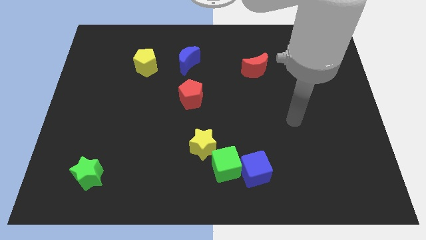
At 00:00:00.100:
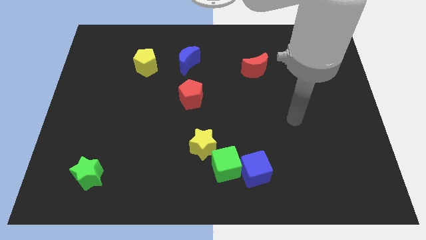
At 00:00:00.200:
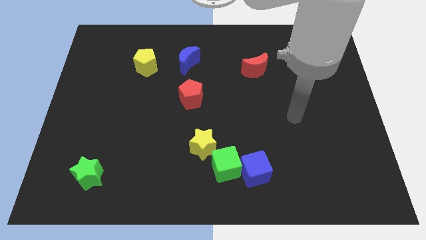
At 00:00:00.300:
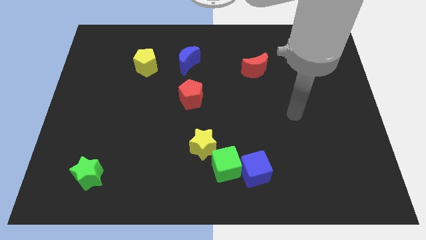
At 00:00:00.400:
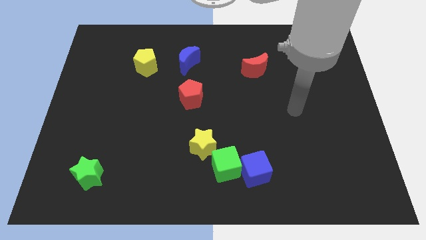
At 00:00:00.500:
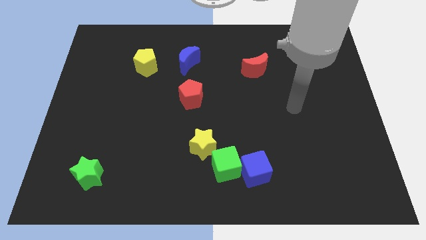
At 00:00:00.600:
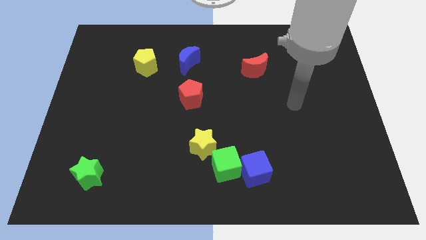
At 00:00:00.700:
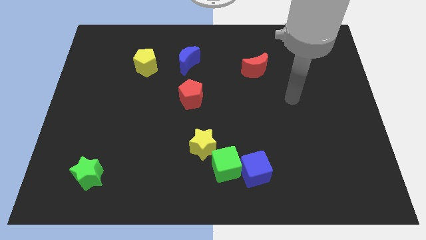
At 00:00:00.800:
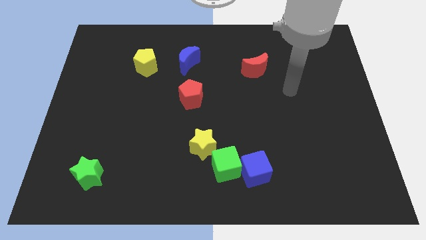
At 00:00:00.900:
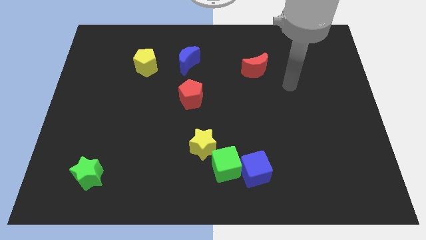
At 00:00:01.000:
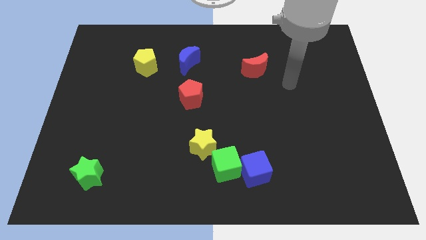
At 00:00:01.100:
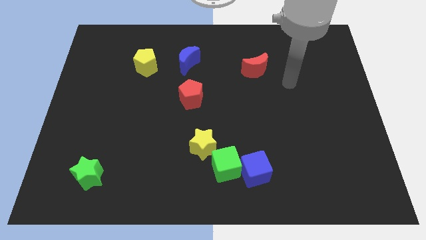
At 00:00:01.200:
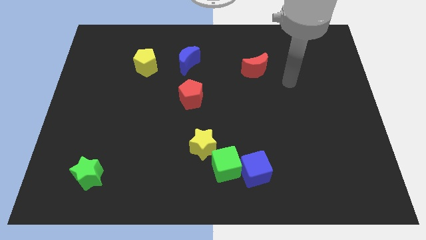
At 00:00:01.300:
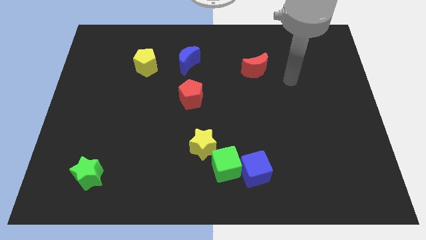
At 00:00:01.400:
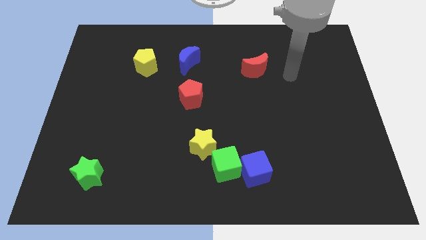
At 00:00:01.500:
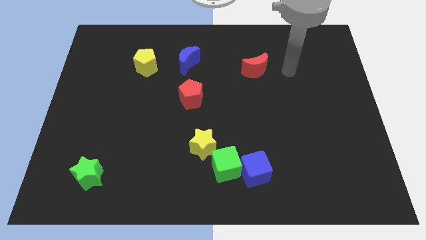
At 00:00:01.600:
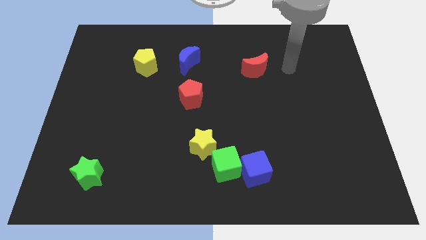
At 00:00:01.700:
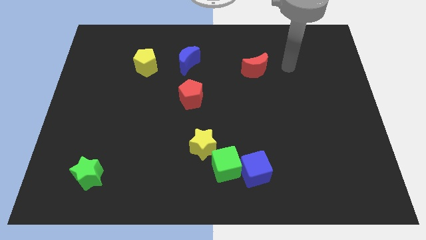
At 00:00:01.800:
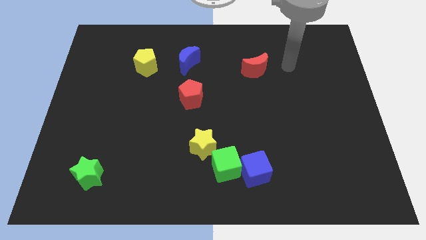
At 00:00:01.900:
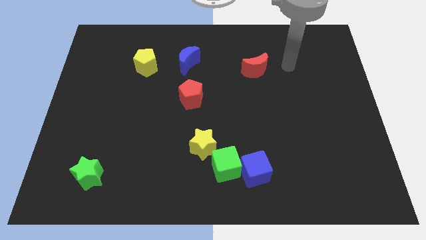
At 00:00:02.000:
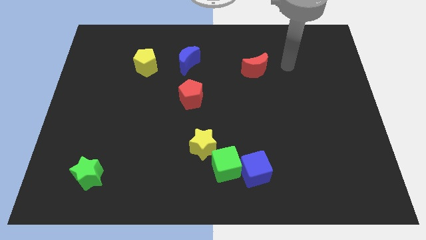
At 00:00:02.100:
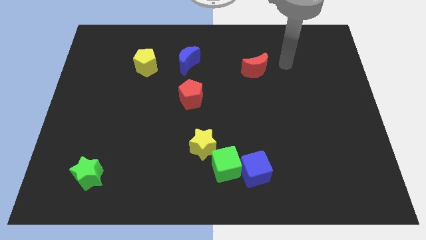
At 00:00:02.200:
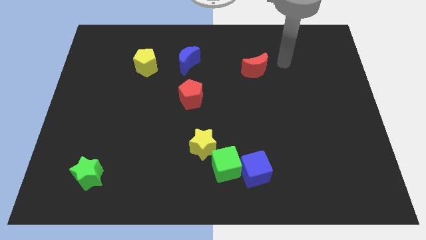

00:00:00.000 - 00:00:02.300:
move your arm towards red crescent

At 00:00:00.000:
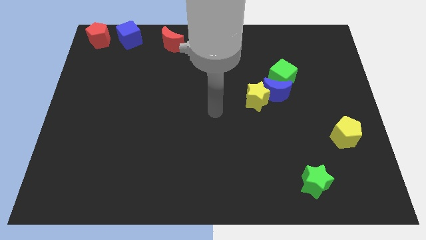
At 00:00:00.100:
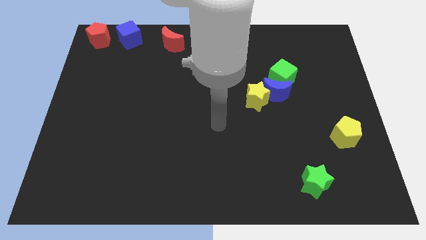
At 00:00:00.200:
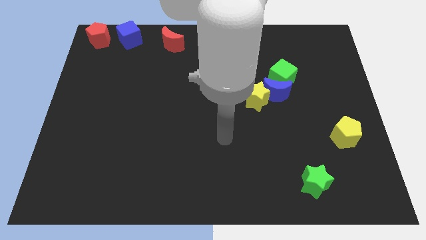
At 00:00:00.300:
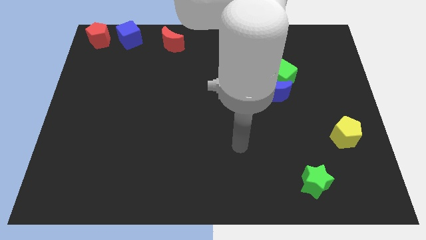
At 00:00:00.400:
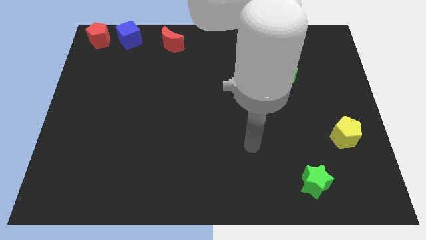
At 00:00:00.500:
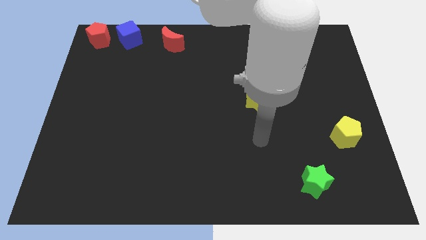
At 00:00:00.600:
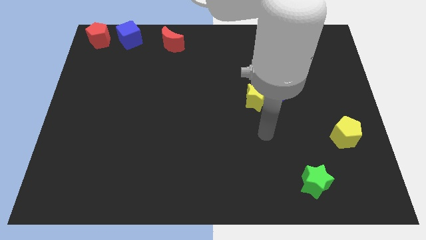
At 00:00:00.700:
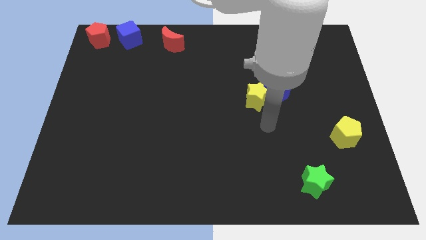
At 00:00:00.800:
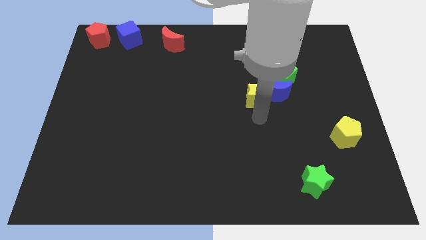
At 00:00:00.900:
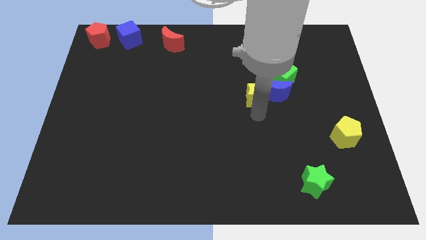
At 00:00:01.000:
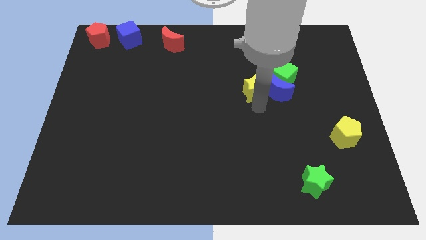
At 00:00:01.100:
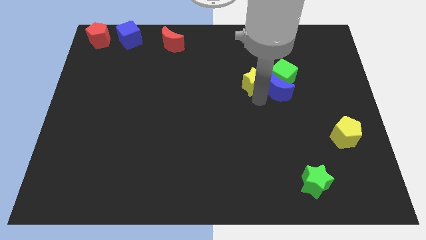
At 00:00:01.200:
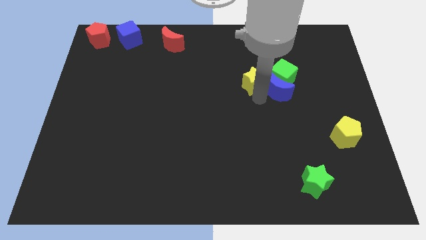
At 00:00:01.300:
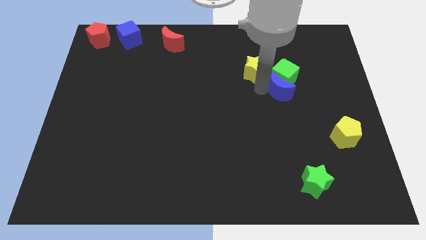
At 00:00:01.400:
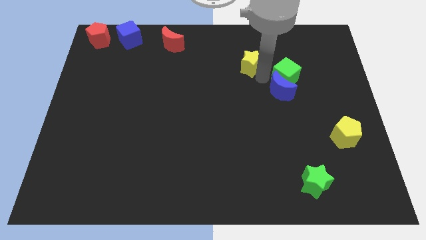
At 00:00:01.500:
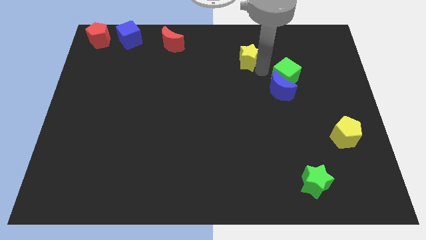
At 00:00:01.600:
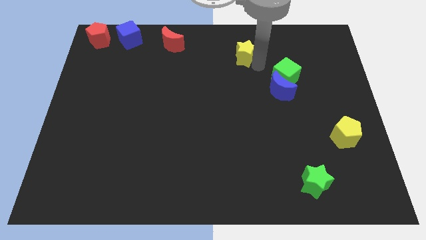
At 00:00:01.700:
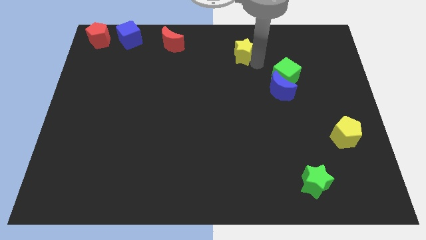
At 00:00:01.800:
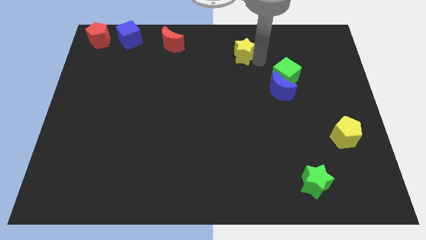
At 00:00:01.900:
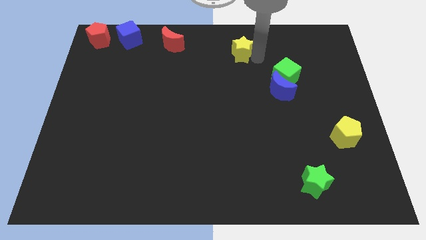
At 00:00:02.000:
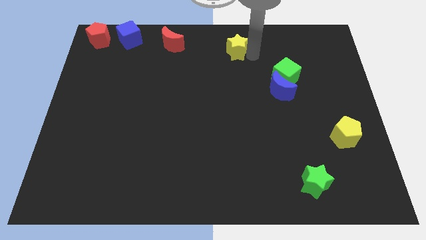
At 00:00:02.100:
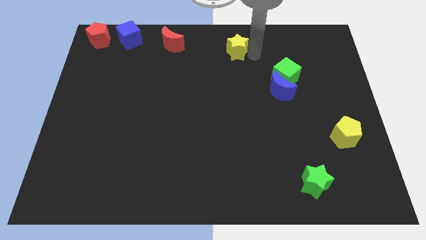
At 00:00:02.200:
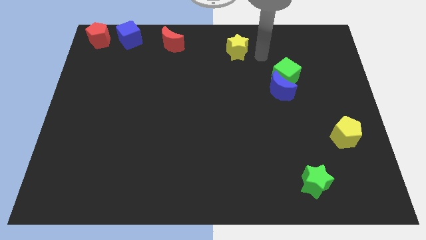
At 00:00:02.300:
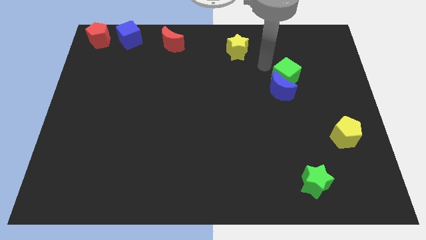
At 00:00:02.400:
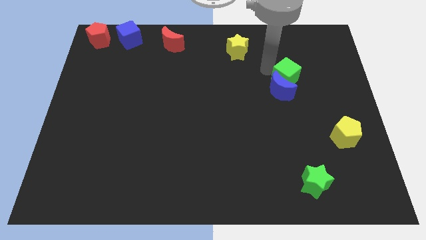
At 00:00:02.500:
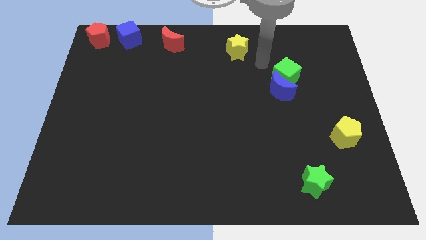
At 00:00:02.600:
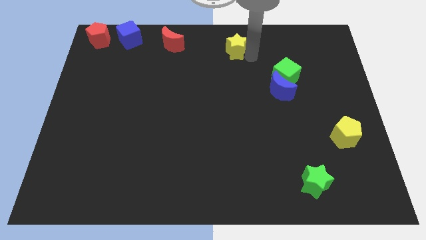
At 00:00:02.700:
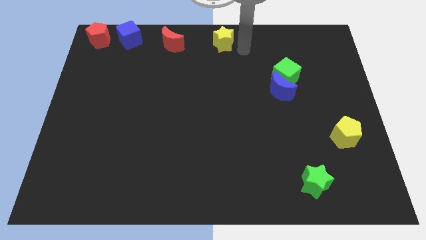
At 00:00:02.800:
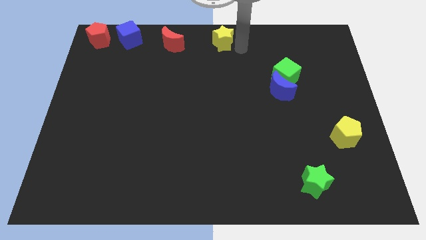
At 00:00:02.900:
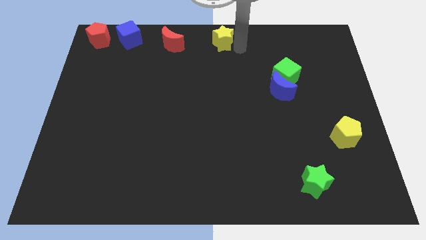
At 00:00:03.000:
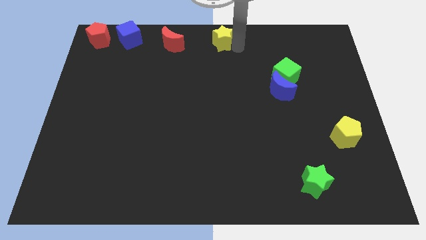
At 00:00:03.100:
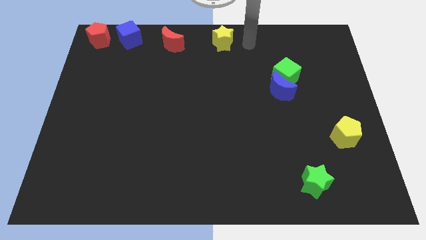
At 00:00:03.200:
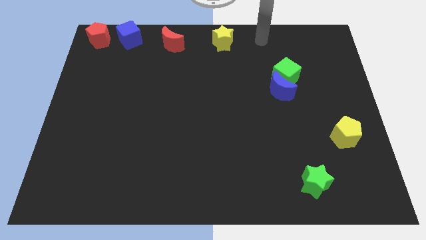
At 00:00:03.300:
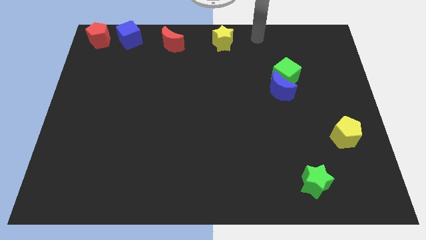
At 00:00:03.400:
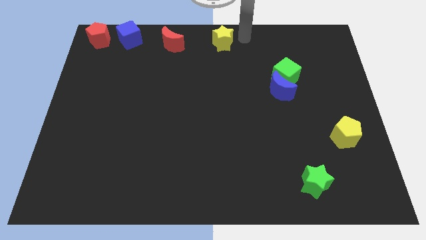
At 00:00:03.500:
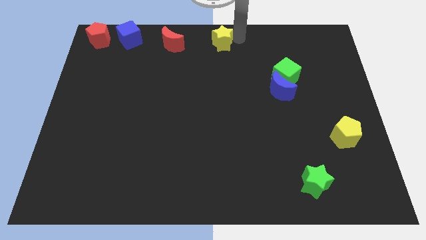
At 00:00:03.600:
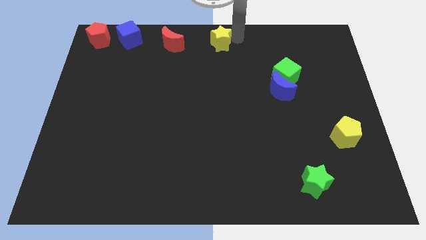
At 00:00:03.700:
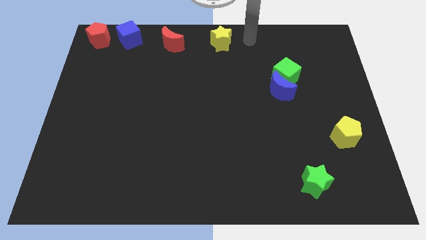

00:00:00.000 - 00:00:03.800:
slide yellow star to center top

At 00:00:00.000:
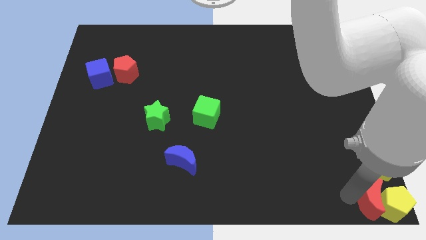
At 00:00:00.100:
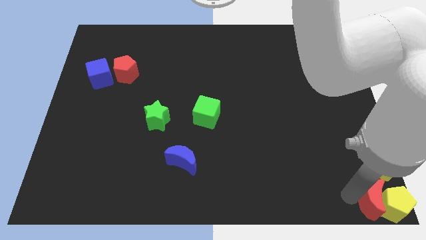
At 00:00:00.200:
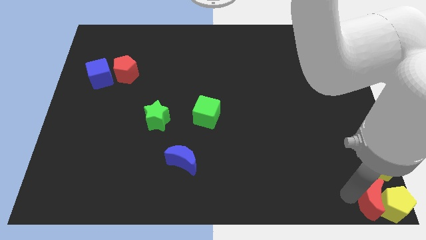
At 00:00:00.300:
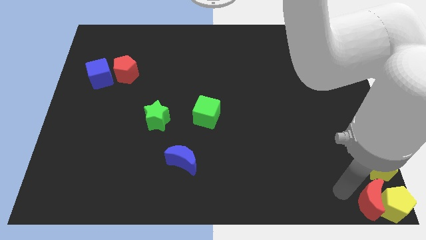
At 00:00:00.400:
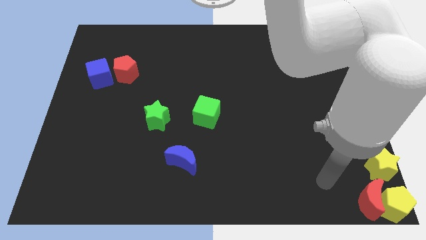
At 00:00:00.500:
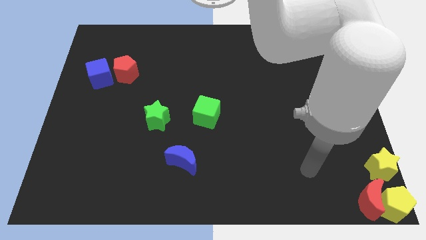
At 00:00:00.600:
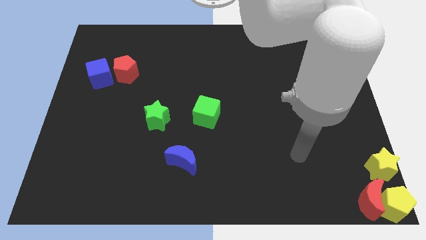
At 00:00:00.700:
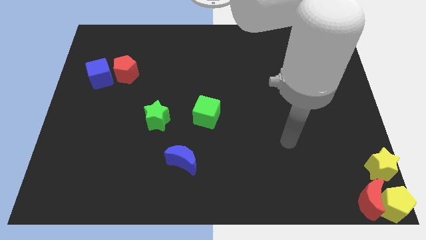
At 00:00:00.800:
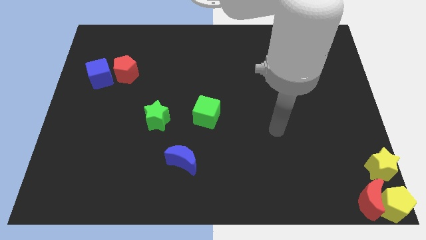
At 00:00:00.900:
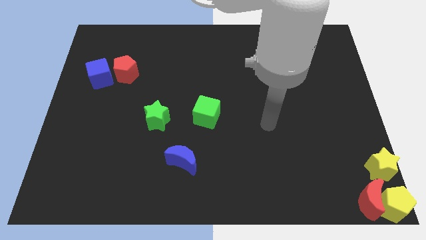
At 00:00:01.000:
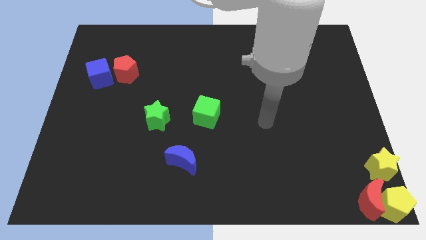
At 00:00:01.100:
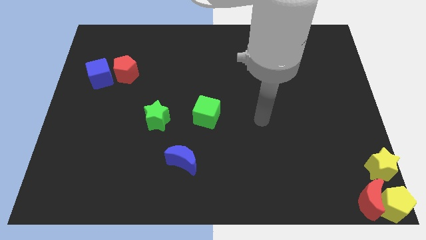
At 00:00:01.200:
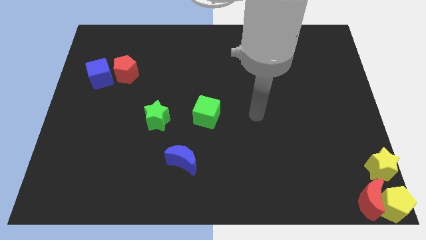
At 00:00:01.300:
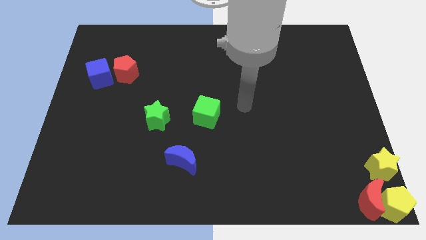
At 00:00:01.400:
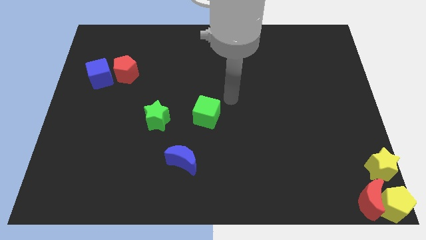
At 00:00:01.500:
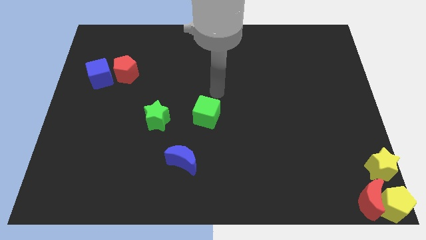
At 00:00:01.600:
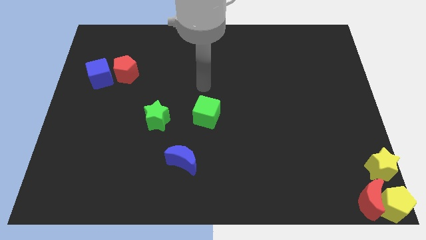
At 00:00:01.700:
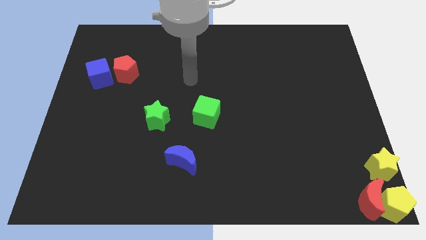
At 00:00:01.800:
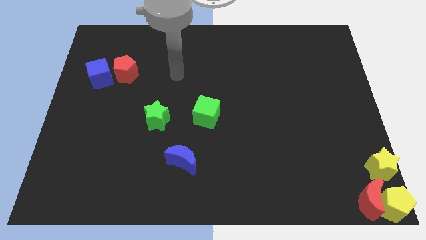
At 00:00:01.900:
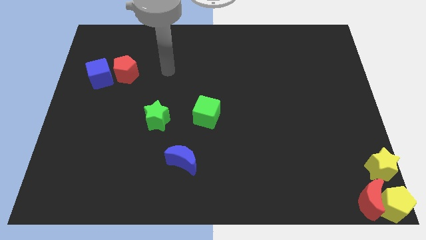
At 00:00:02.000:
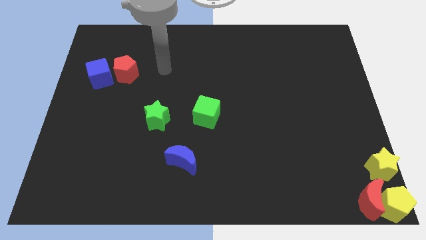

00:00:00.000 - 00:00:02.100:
move your arm away

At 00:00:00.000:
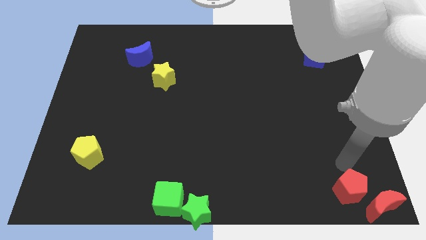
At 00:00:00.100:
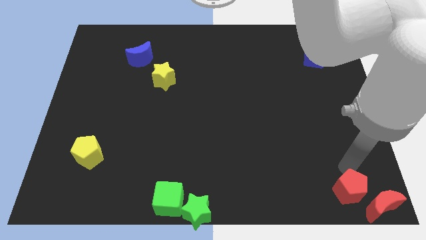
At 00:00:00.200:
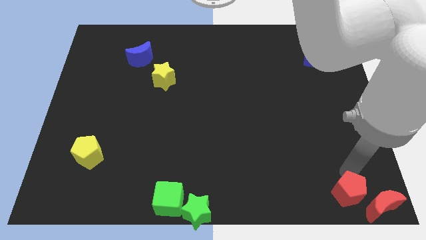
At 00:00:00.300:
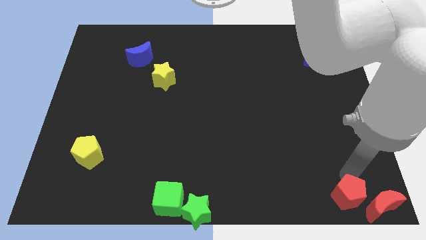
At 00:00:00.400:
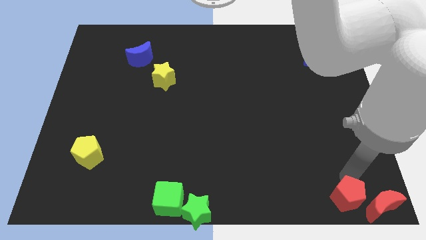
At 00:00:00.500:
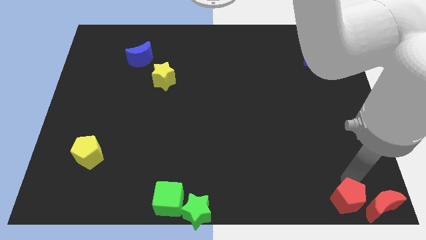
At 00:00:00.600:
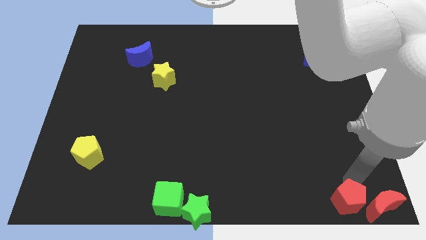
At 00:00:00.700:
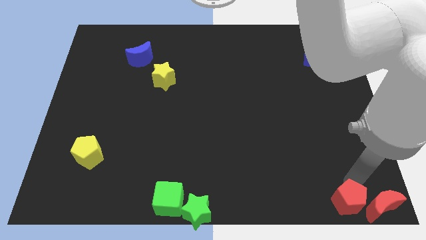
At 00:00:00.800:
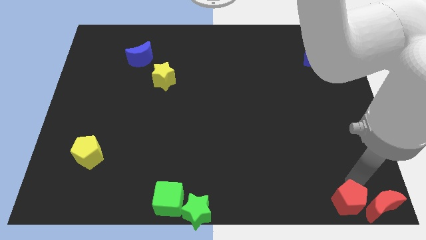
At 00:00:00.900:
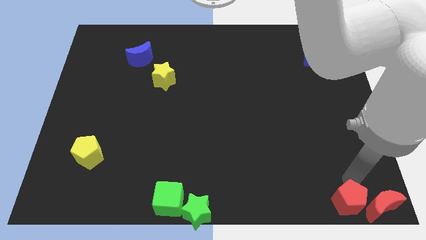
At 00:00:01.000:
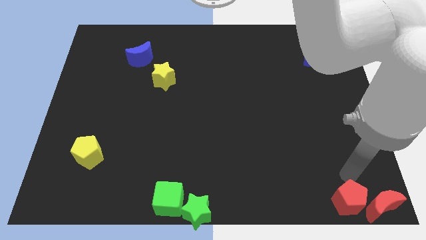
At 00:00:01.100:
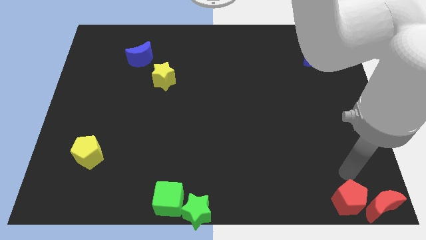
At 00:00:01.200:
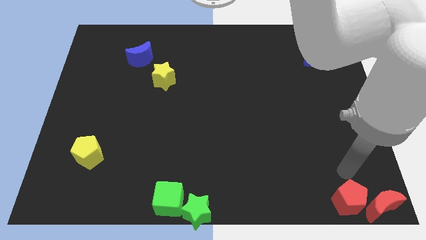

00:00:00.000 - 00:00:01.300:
move the red pentagon slightly towards the bottom of the board
